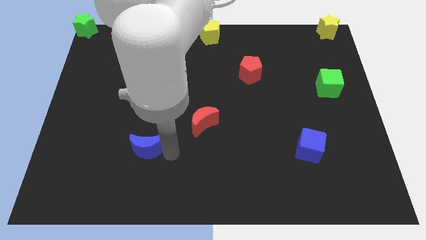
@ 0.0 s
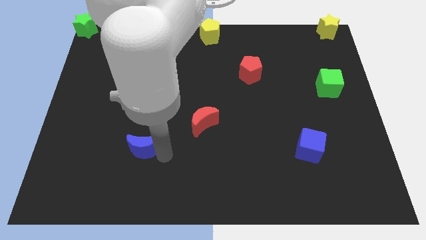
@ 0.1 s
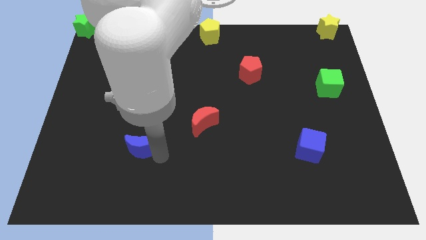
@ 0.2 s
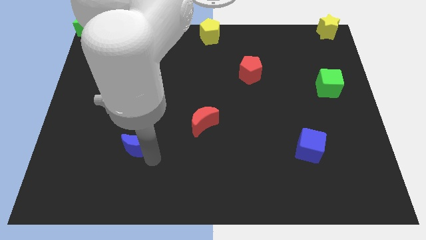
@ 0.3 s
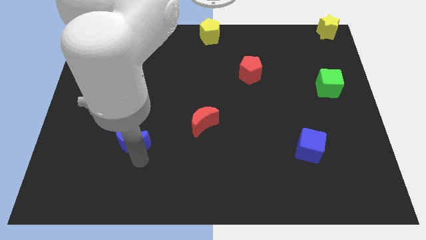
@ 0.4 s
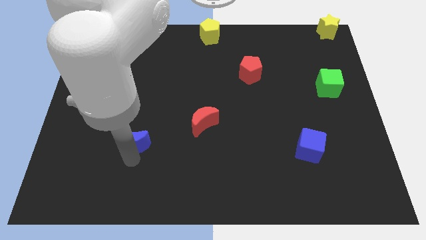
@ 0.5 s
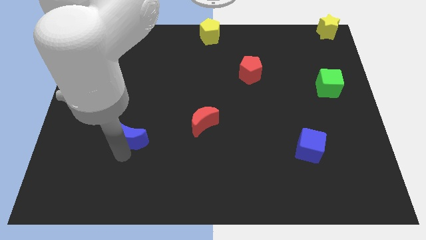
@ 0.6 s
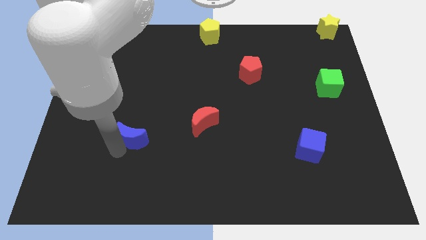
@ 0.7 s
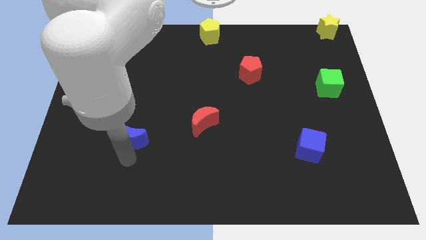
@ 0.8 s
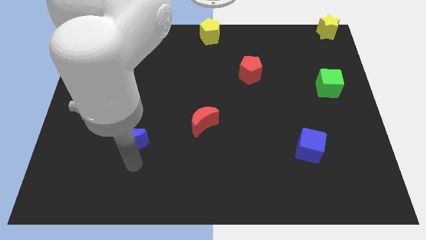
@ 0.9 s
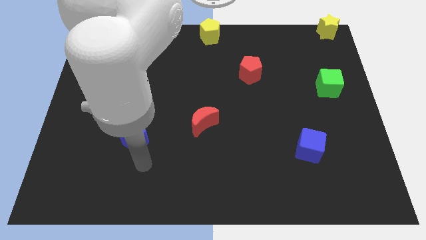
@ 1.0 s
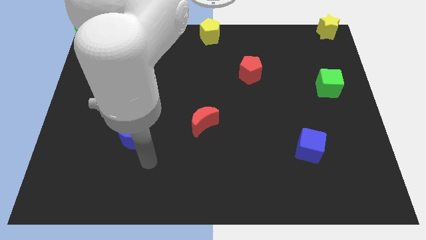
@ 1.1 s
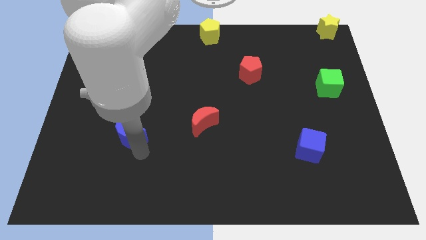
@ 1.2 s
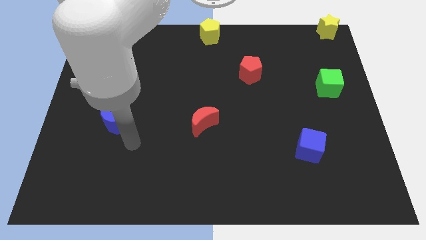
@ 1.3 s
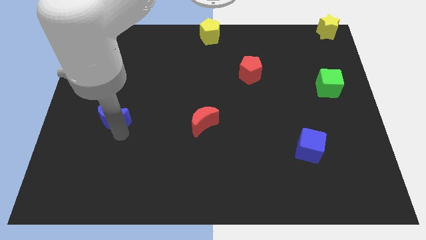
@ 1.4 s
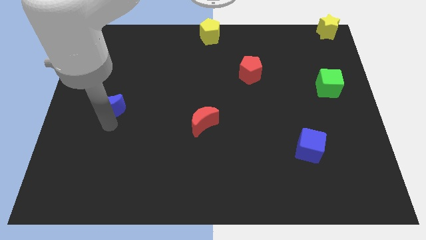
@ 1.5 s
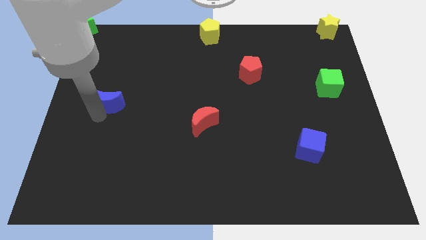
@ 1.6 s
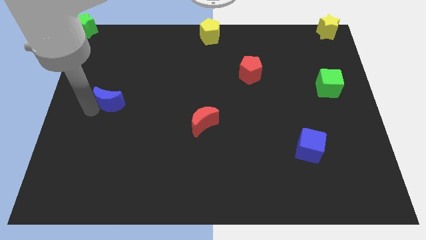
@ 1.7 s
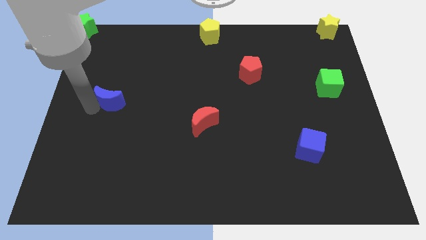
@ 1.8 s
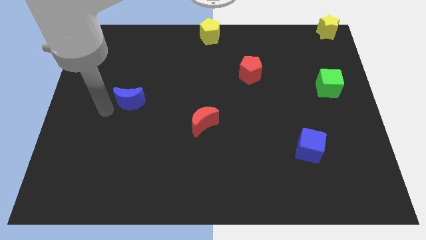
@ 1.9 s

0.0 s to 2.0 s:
push blue moon towards top

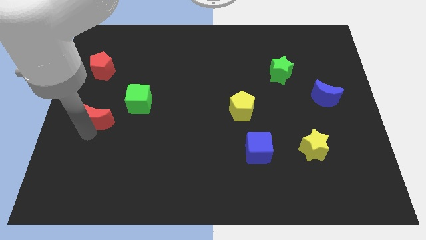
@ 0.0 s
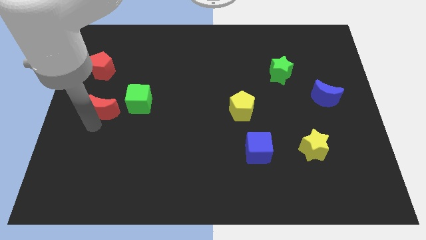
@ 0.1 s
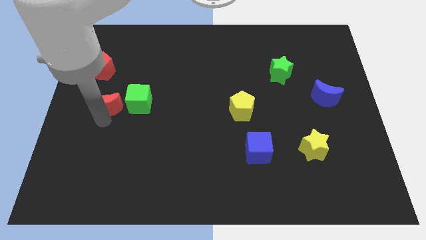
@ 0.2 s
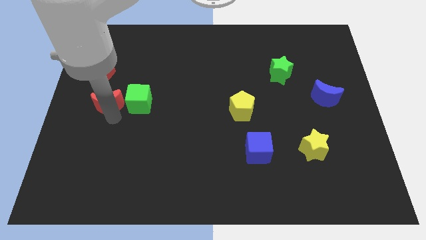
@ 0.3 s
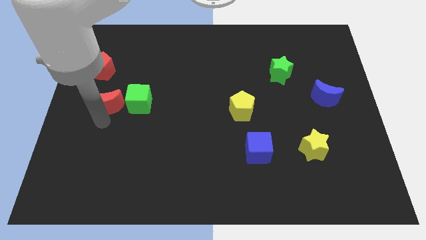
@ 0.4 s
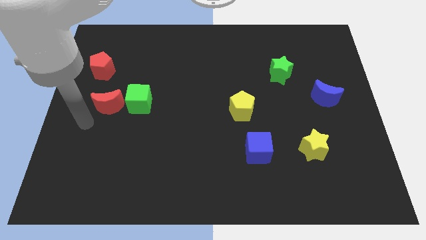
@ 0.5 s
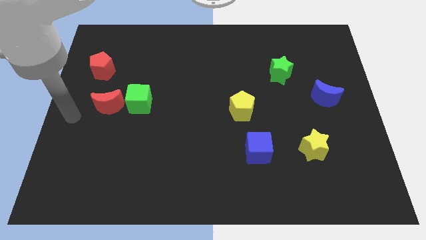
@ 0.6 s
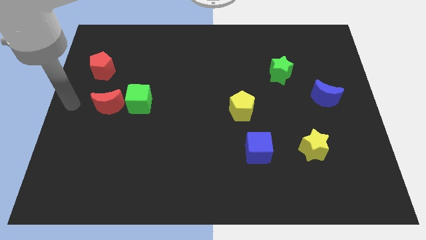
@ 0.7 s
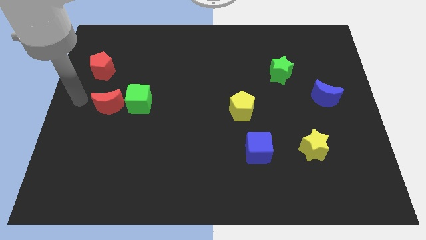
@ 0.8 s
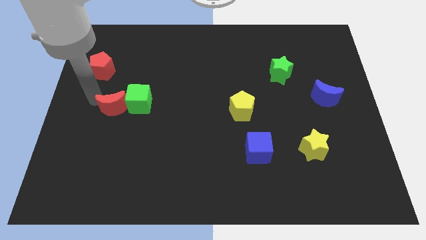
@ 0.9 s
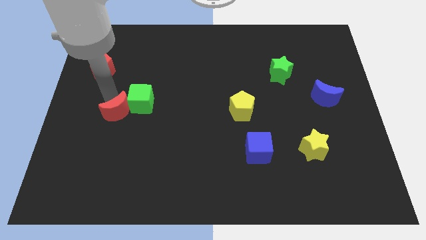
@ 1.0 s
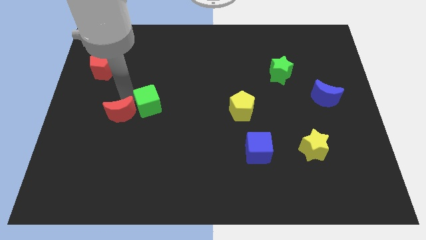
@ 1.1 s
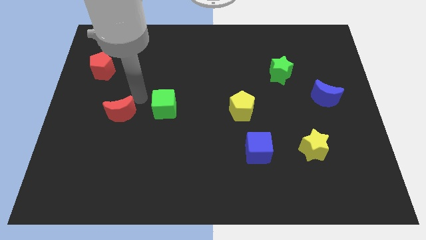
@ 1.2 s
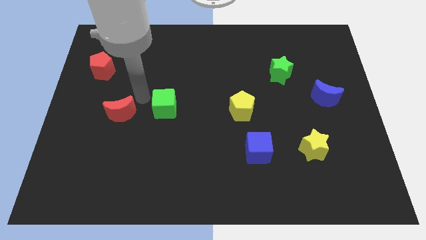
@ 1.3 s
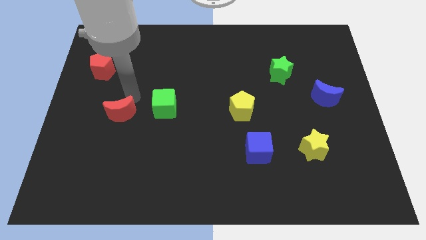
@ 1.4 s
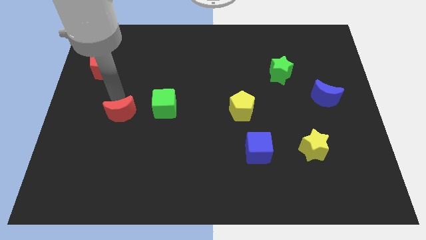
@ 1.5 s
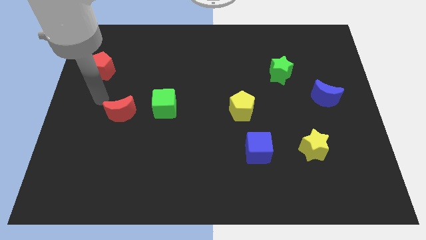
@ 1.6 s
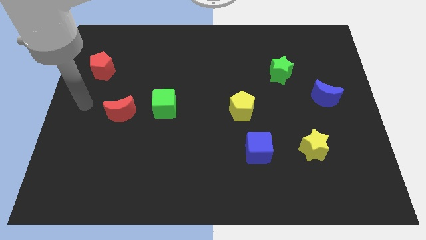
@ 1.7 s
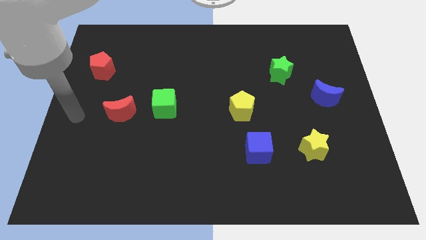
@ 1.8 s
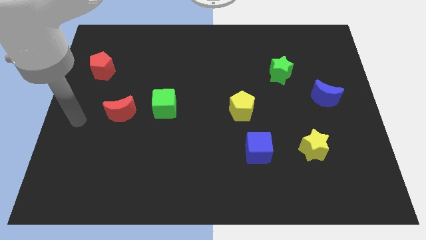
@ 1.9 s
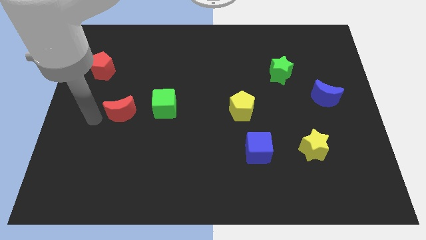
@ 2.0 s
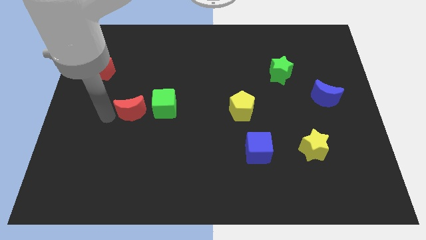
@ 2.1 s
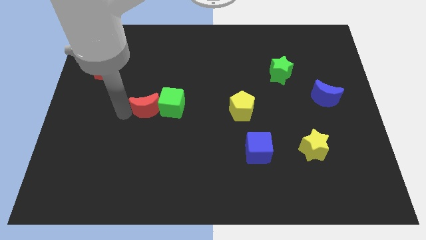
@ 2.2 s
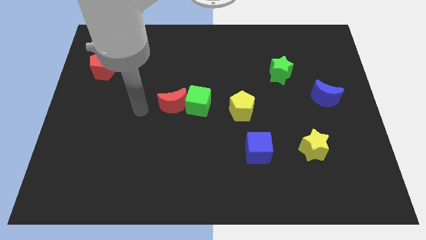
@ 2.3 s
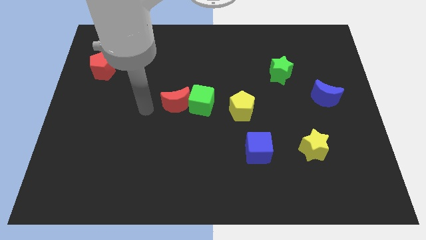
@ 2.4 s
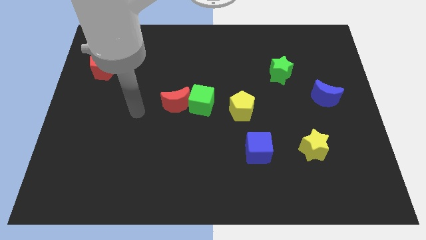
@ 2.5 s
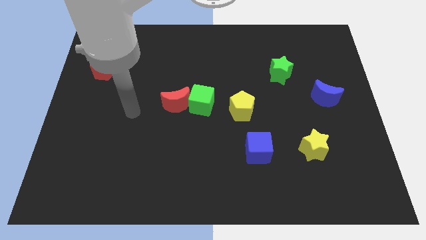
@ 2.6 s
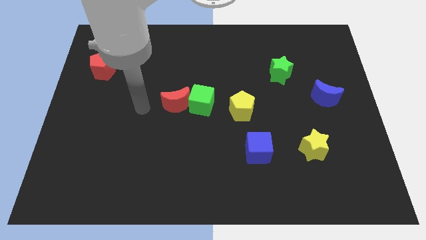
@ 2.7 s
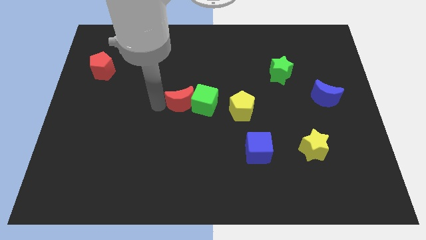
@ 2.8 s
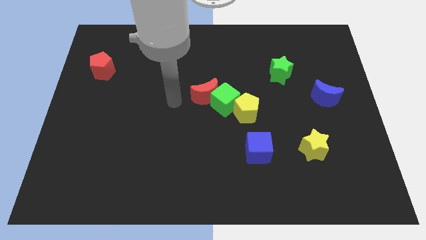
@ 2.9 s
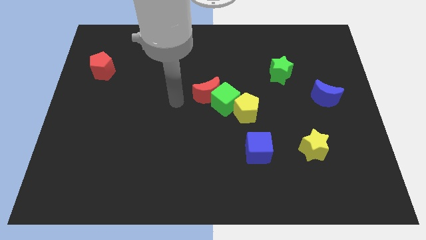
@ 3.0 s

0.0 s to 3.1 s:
put the red crescent green cube and yellow pentagon at the center of the board

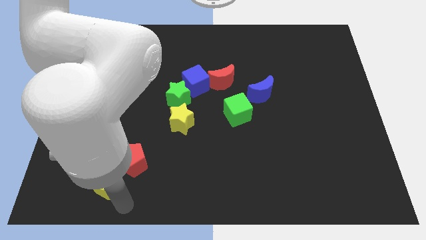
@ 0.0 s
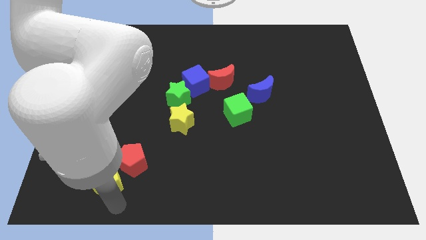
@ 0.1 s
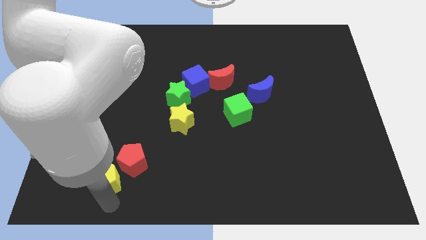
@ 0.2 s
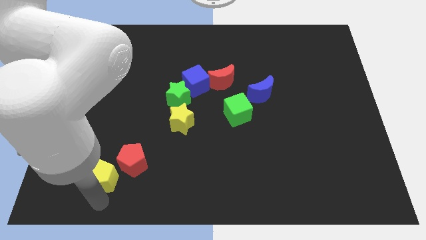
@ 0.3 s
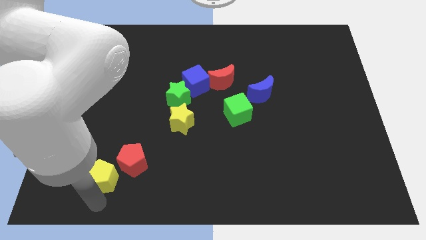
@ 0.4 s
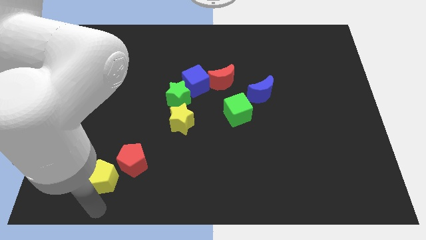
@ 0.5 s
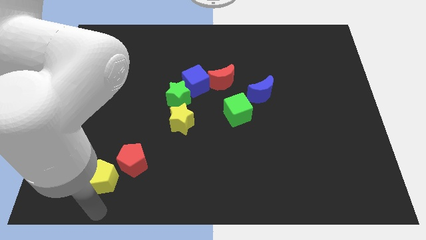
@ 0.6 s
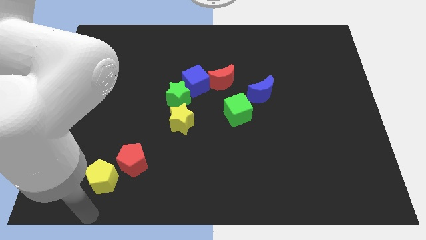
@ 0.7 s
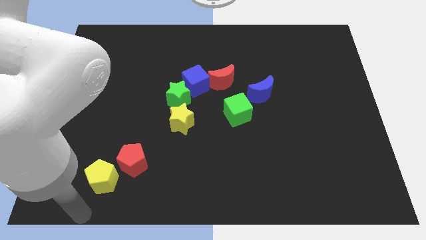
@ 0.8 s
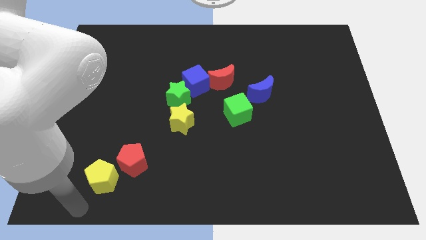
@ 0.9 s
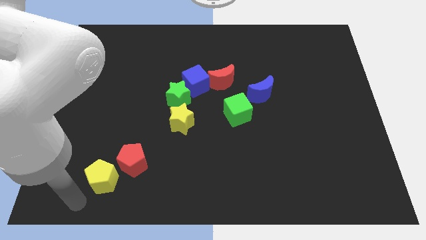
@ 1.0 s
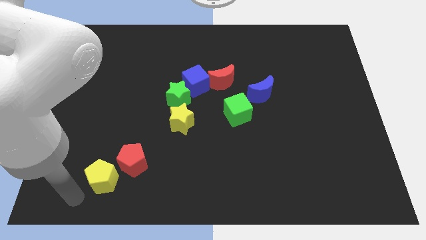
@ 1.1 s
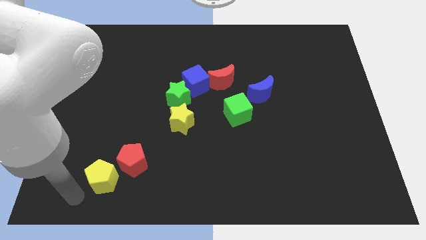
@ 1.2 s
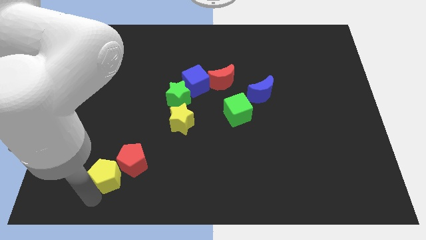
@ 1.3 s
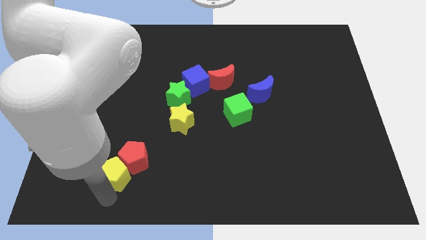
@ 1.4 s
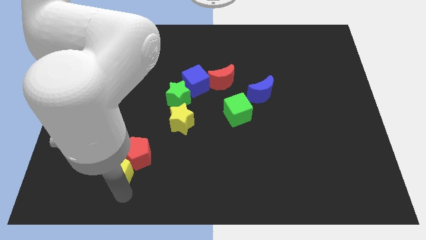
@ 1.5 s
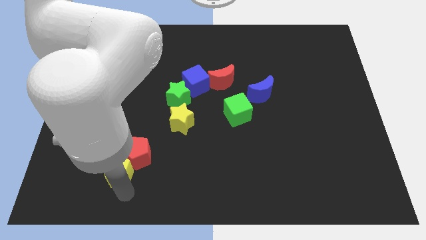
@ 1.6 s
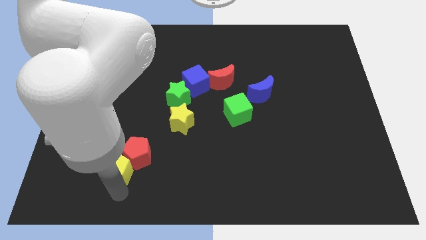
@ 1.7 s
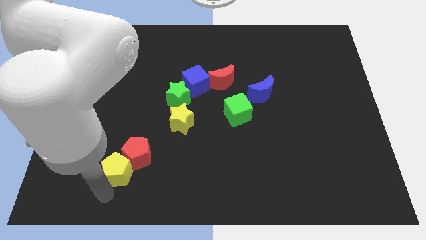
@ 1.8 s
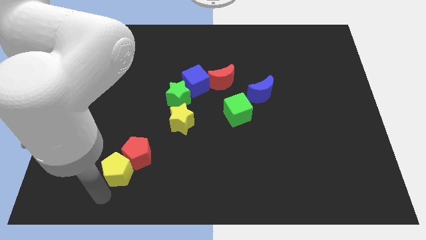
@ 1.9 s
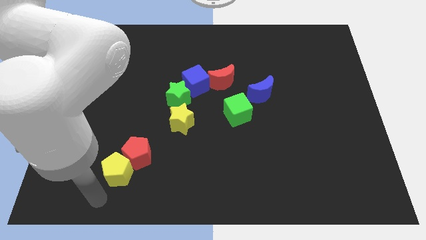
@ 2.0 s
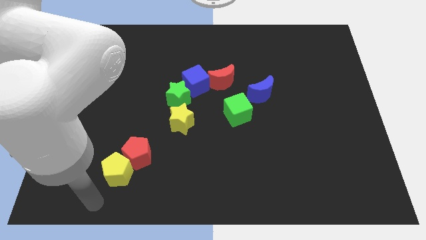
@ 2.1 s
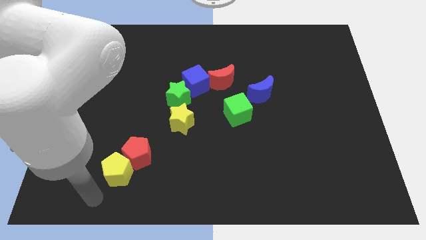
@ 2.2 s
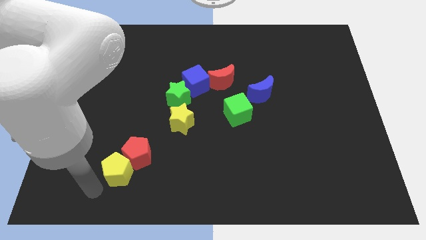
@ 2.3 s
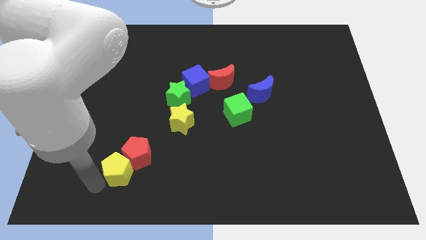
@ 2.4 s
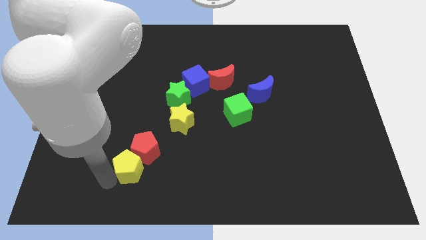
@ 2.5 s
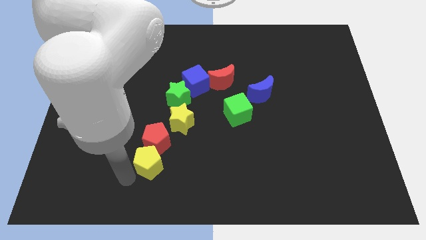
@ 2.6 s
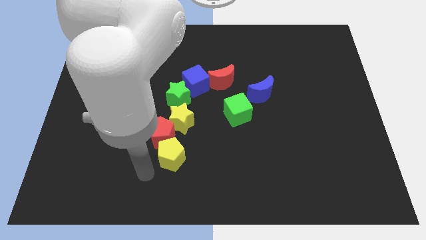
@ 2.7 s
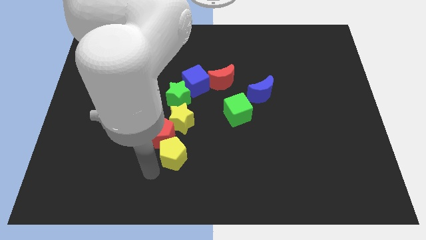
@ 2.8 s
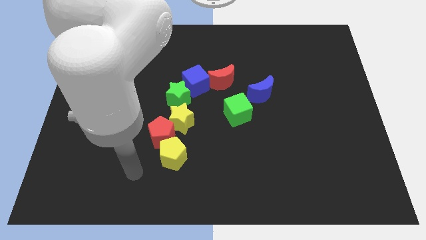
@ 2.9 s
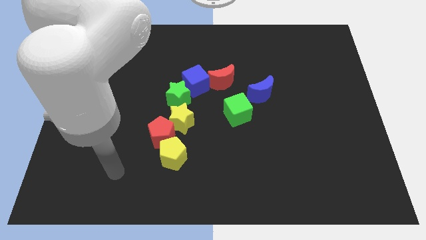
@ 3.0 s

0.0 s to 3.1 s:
push the yellow pentagon into the red pentagon

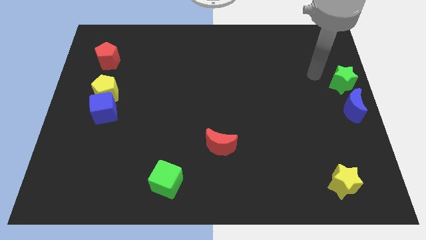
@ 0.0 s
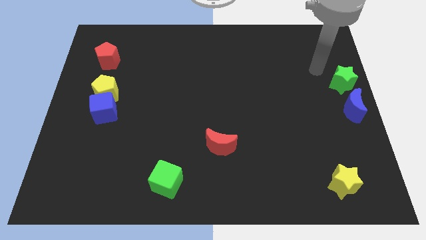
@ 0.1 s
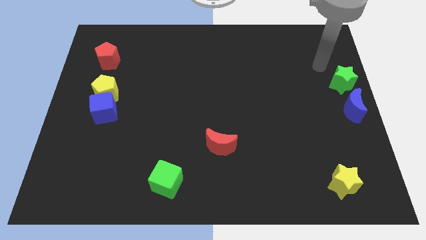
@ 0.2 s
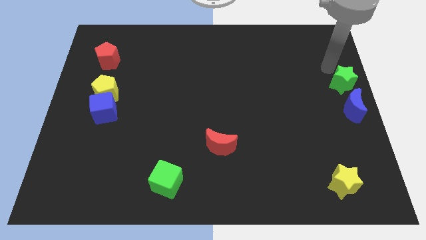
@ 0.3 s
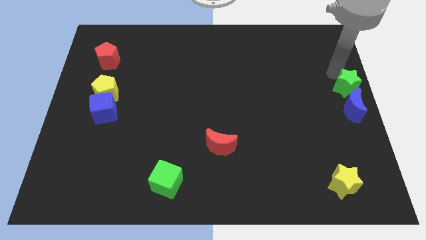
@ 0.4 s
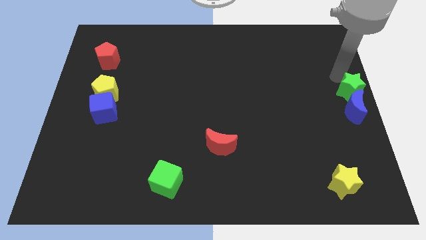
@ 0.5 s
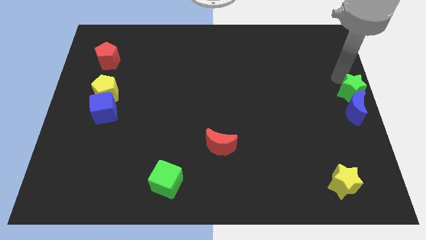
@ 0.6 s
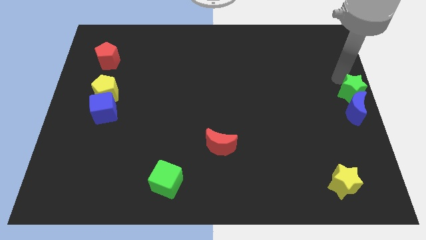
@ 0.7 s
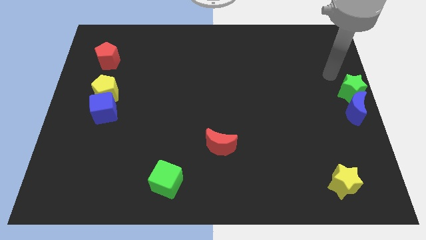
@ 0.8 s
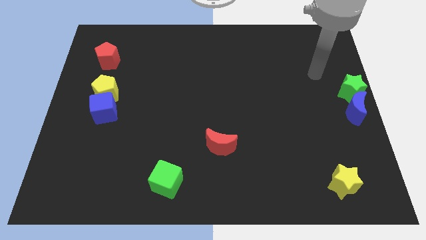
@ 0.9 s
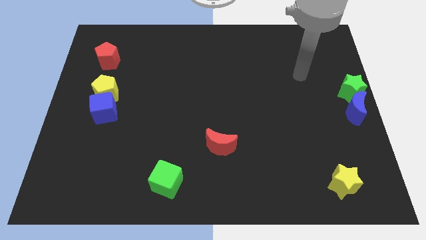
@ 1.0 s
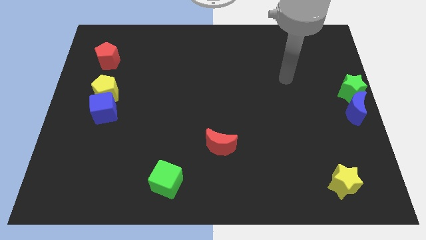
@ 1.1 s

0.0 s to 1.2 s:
push the green star into the blue moon
